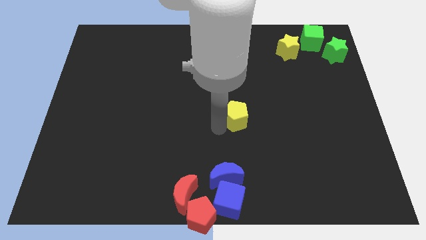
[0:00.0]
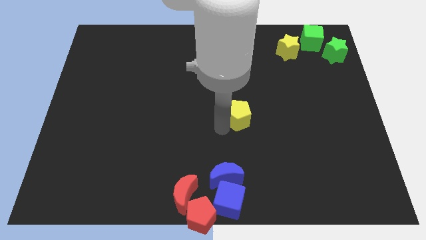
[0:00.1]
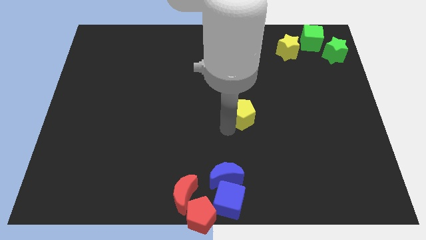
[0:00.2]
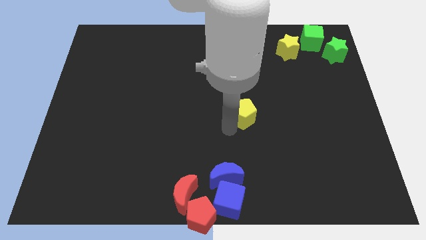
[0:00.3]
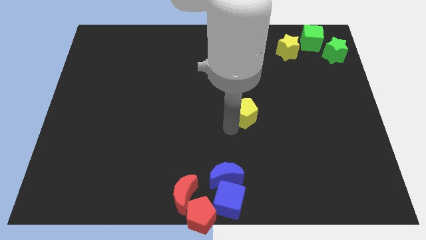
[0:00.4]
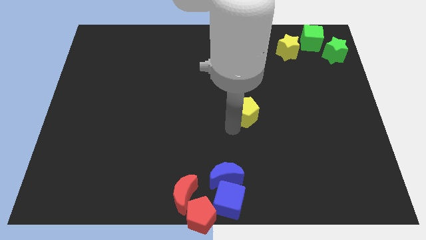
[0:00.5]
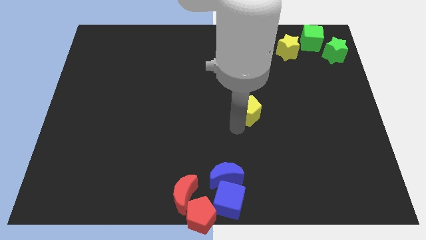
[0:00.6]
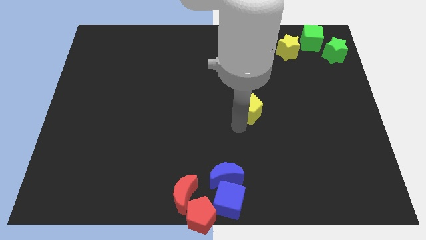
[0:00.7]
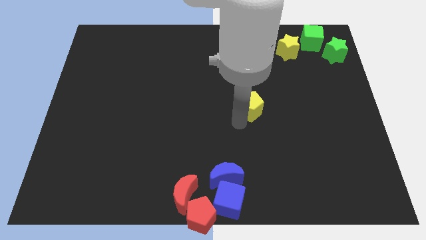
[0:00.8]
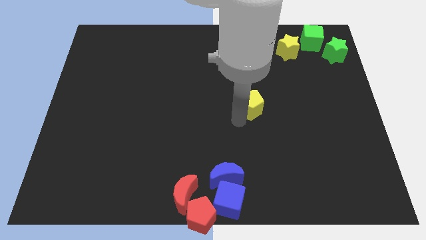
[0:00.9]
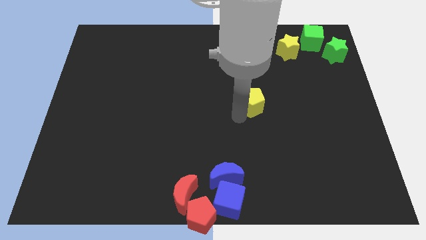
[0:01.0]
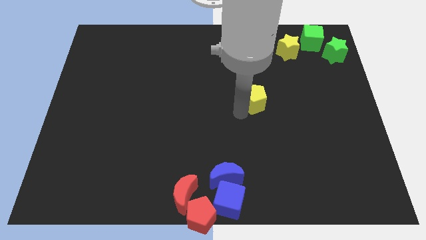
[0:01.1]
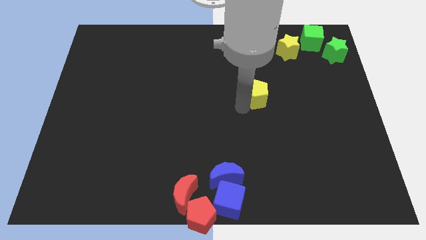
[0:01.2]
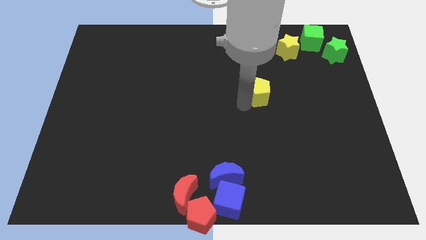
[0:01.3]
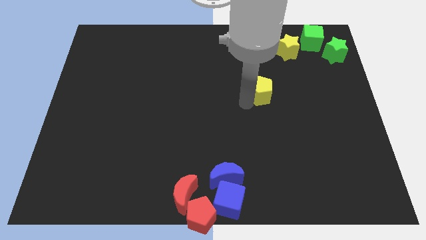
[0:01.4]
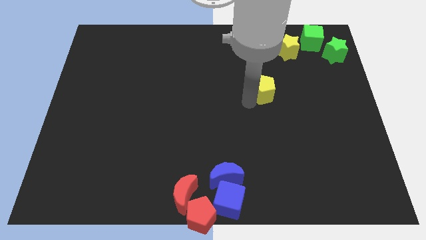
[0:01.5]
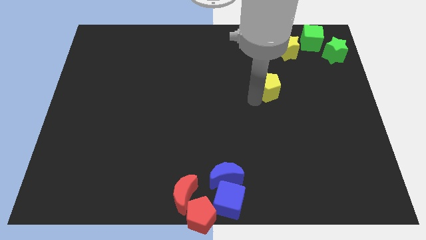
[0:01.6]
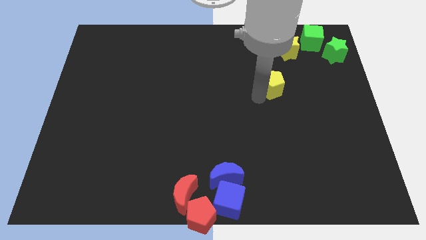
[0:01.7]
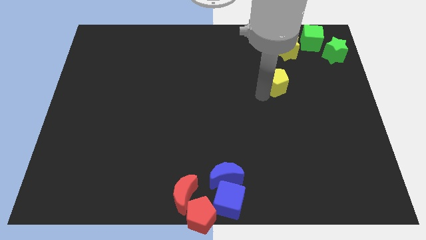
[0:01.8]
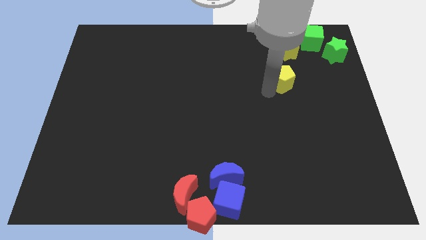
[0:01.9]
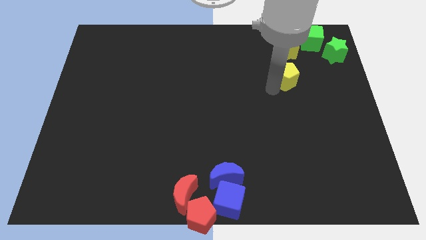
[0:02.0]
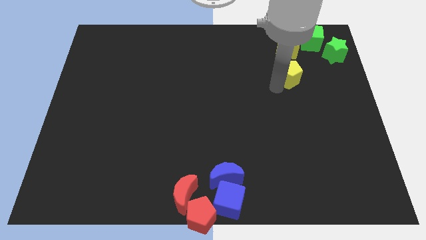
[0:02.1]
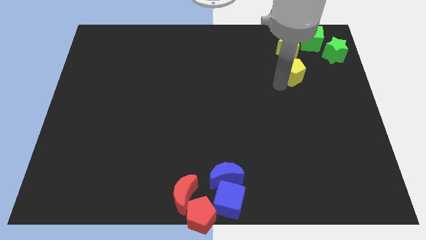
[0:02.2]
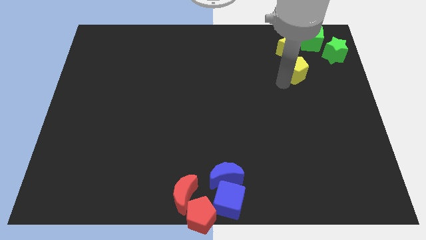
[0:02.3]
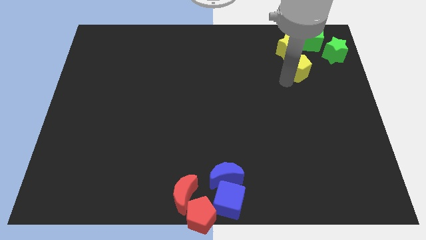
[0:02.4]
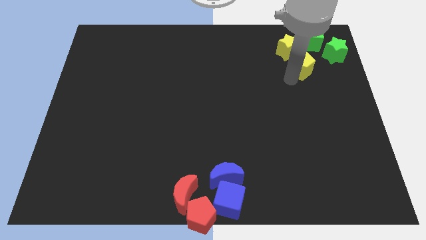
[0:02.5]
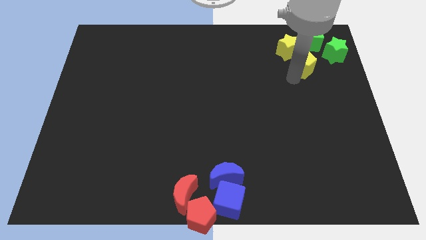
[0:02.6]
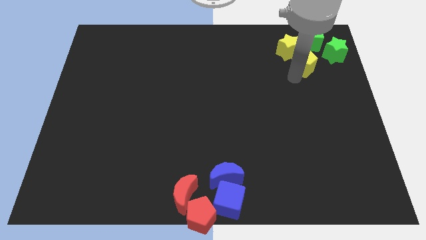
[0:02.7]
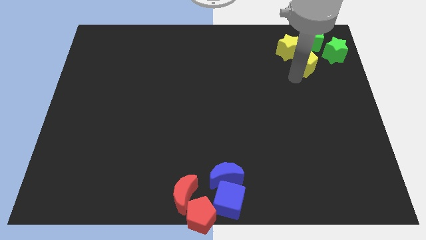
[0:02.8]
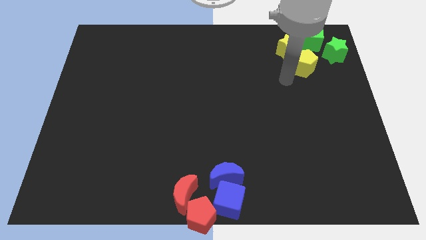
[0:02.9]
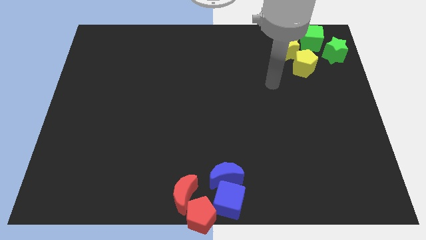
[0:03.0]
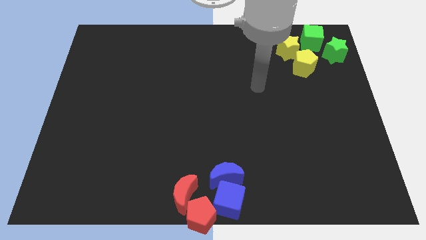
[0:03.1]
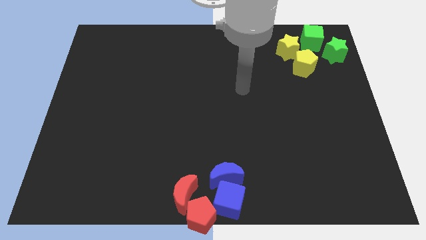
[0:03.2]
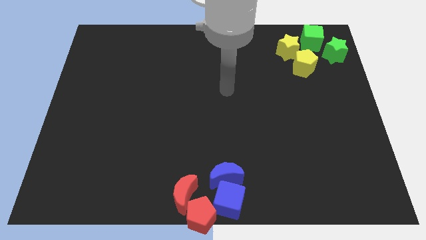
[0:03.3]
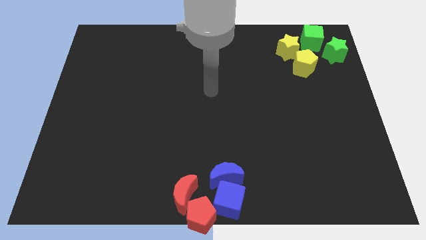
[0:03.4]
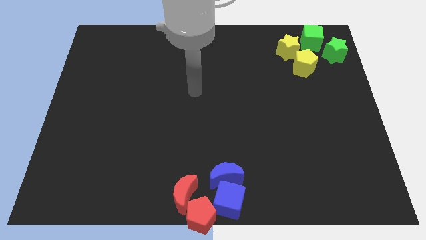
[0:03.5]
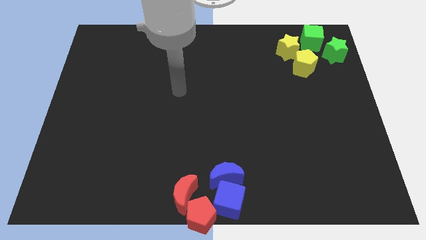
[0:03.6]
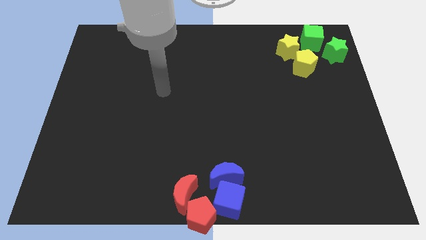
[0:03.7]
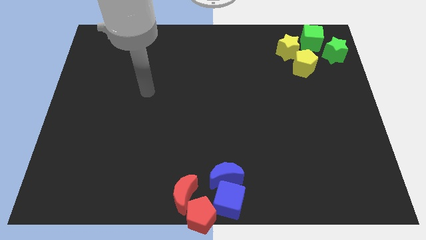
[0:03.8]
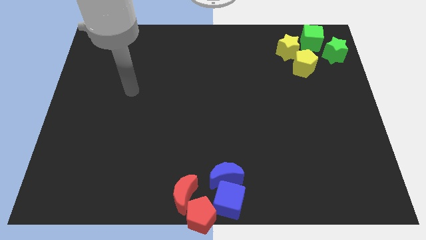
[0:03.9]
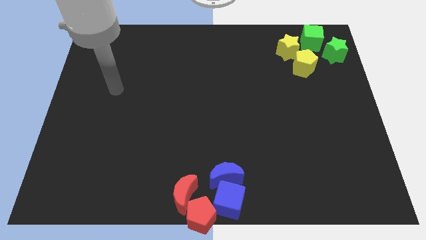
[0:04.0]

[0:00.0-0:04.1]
move the yellow pentagon to right bottom side of the yellow star

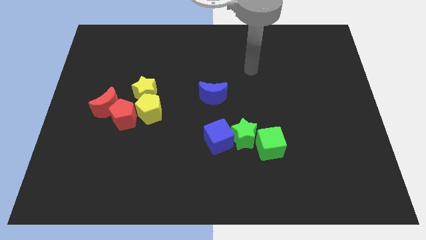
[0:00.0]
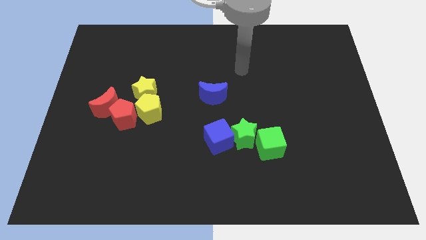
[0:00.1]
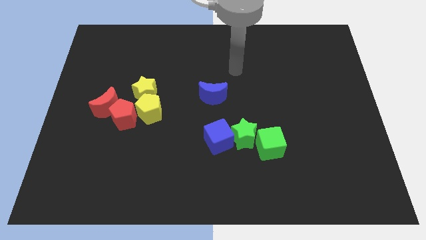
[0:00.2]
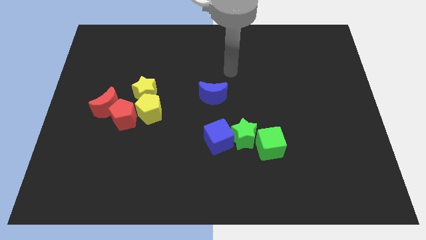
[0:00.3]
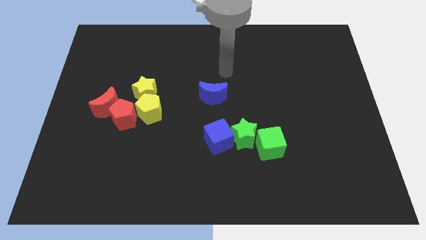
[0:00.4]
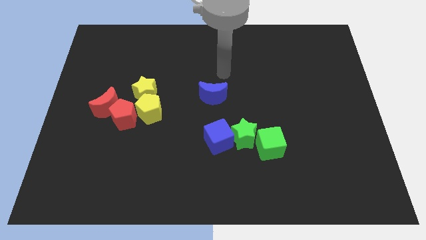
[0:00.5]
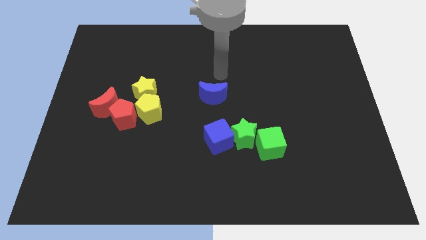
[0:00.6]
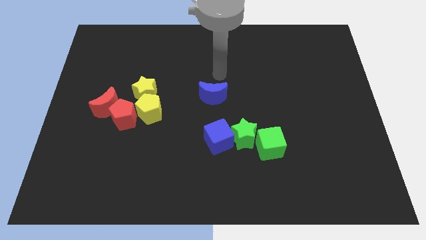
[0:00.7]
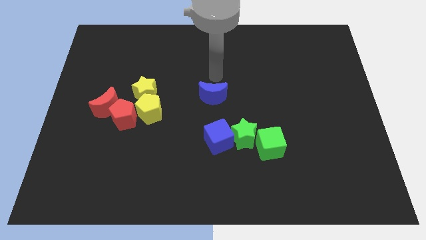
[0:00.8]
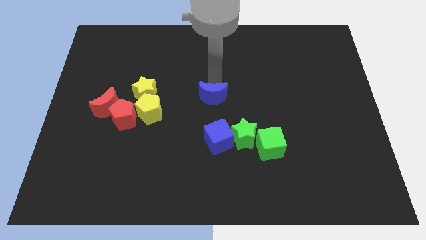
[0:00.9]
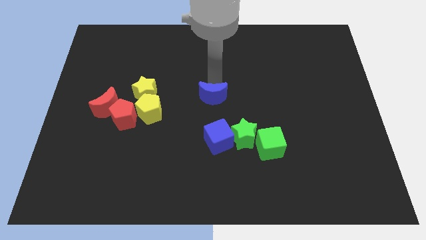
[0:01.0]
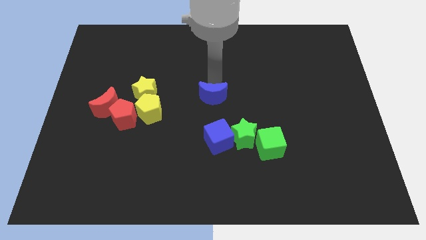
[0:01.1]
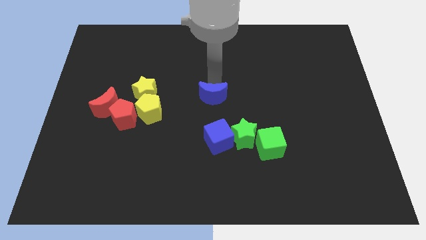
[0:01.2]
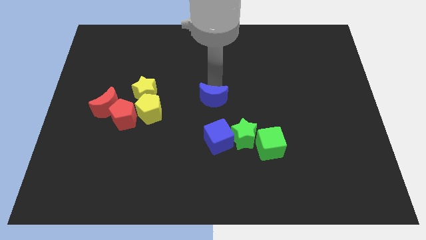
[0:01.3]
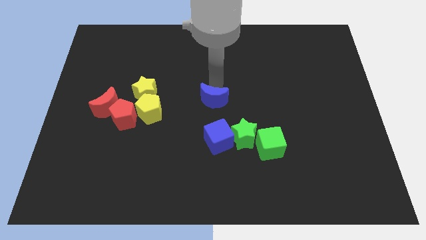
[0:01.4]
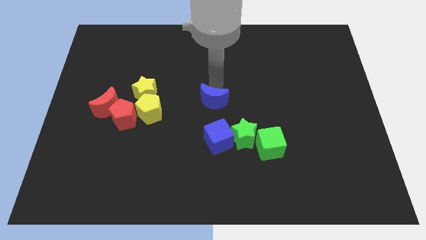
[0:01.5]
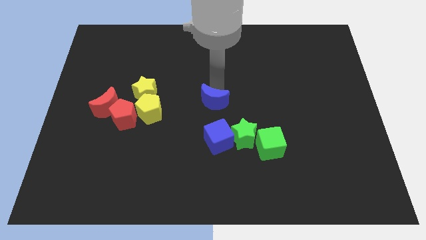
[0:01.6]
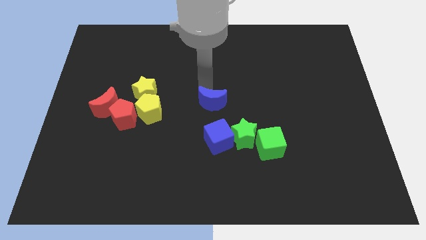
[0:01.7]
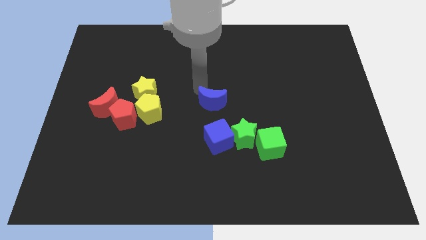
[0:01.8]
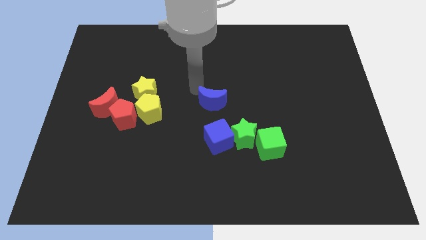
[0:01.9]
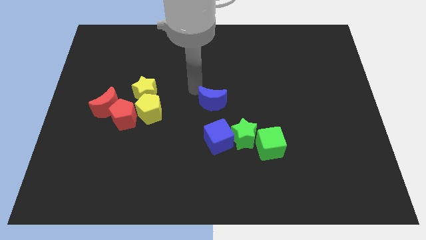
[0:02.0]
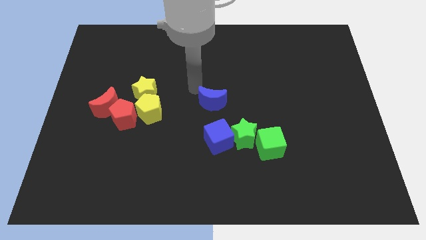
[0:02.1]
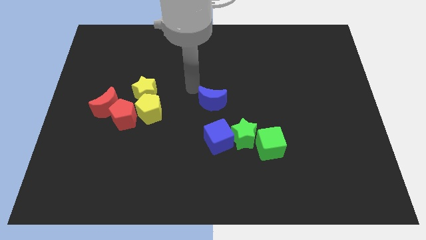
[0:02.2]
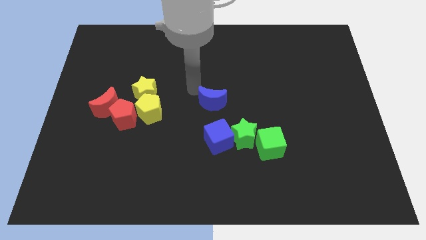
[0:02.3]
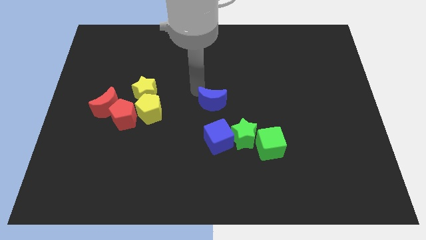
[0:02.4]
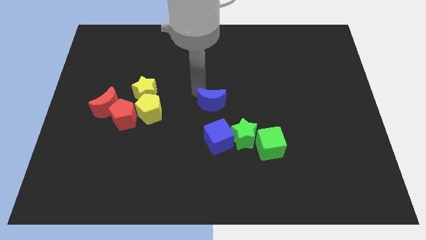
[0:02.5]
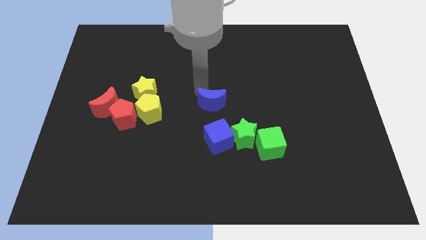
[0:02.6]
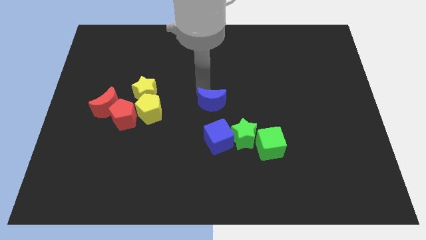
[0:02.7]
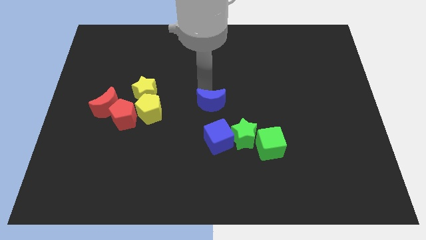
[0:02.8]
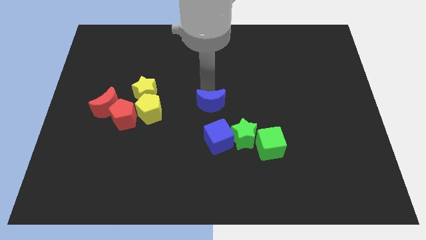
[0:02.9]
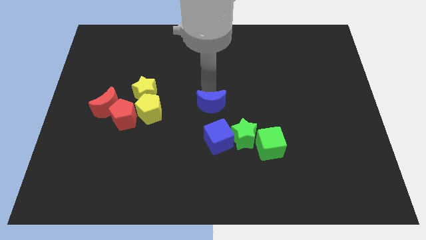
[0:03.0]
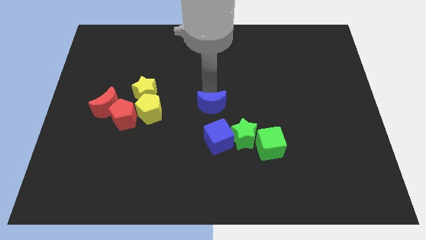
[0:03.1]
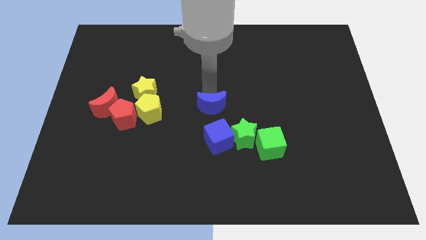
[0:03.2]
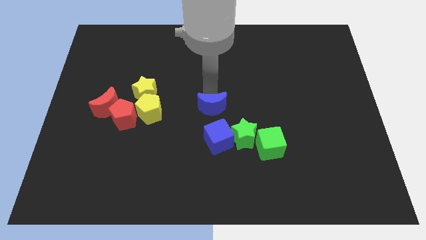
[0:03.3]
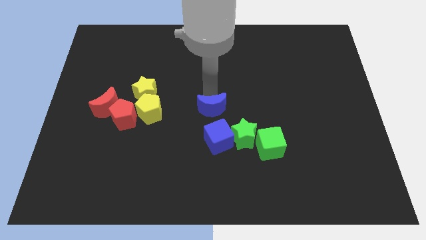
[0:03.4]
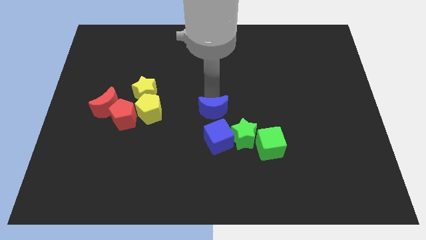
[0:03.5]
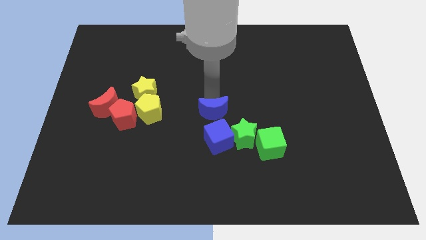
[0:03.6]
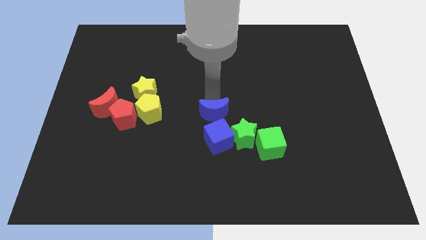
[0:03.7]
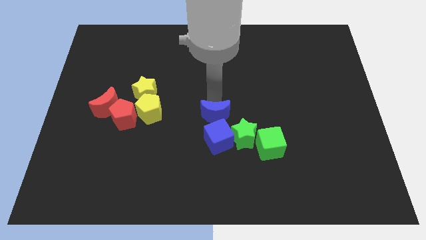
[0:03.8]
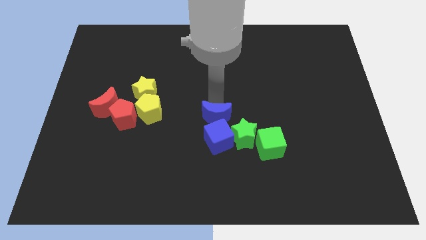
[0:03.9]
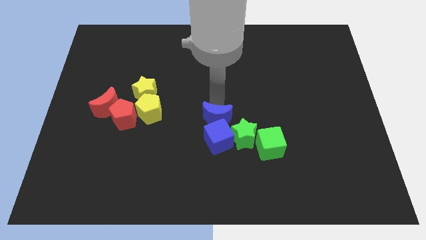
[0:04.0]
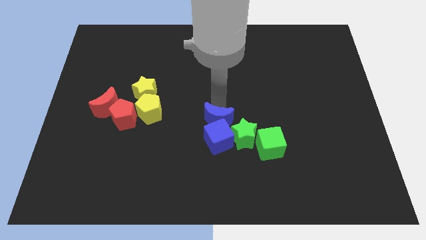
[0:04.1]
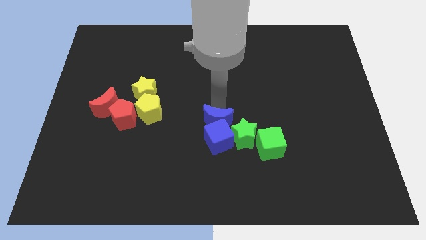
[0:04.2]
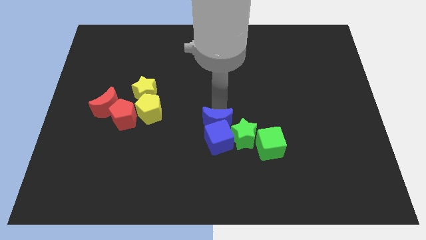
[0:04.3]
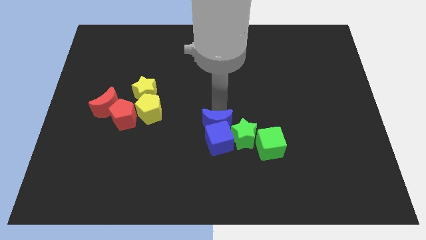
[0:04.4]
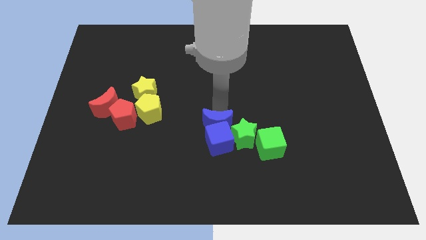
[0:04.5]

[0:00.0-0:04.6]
place the blue crescent above the blue cube

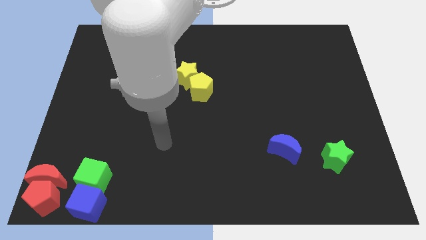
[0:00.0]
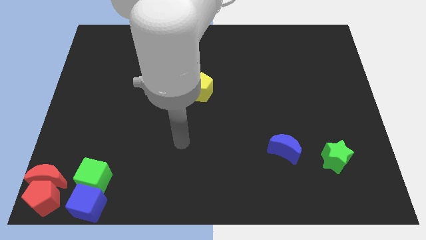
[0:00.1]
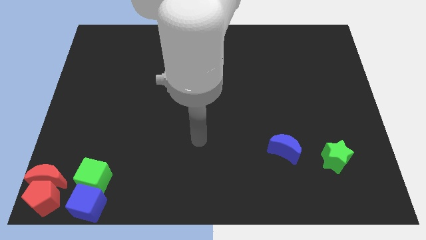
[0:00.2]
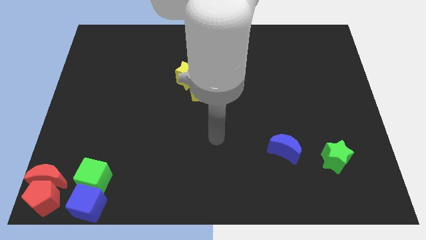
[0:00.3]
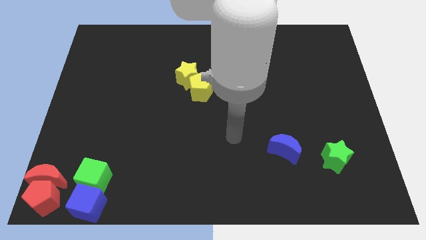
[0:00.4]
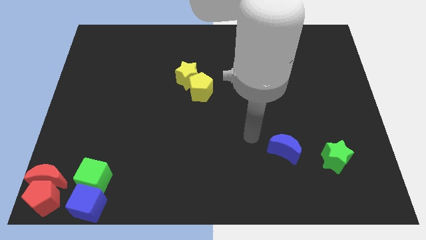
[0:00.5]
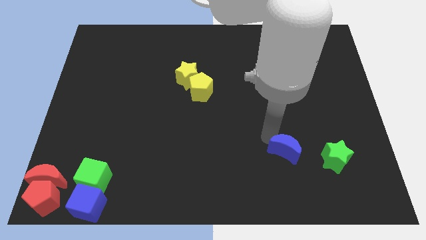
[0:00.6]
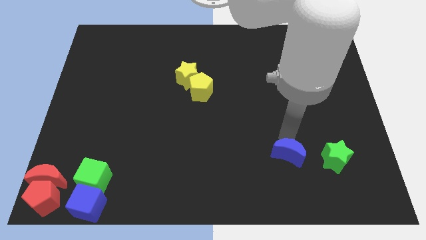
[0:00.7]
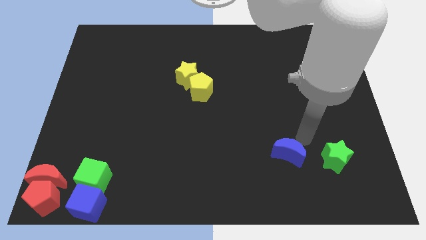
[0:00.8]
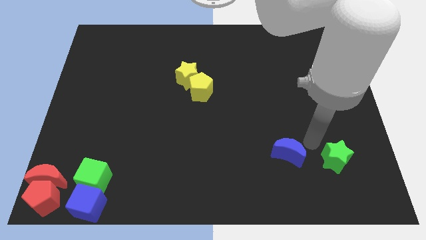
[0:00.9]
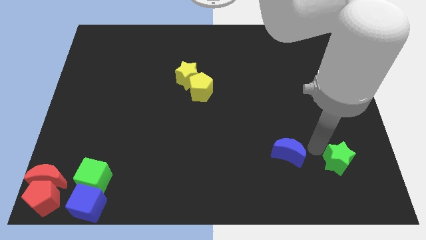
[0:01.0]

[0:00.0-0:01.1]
place the arm to the left side of green star
